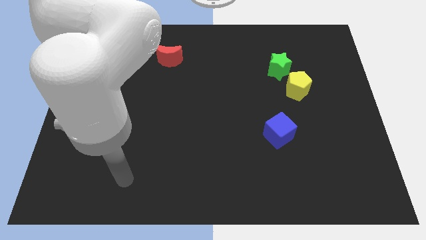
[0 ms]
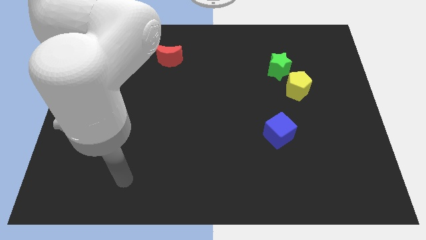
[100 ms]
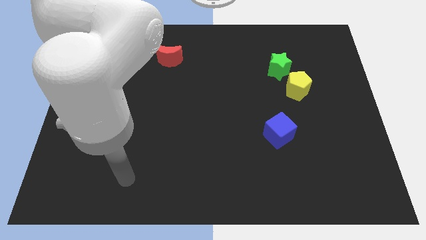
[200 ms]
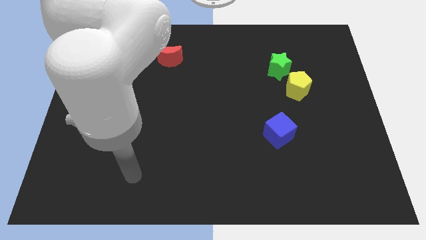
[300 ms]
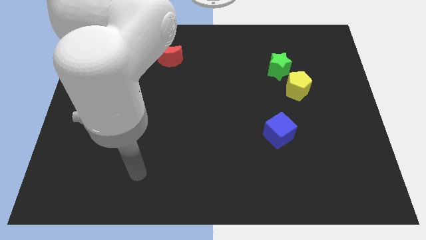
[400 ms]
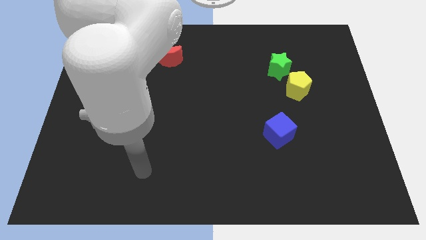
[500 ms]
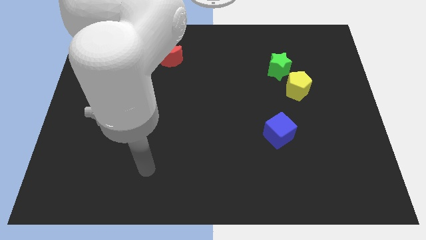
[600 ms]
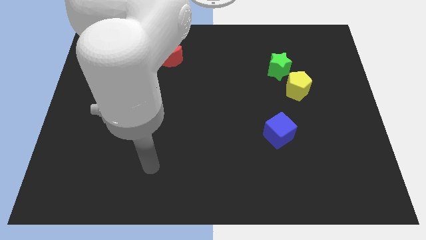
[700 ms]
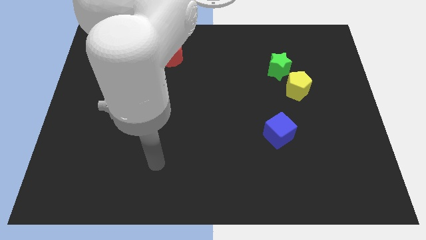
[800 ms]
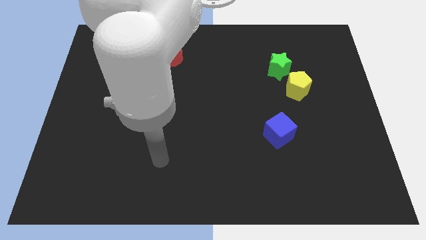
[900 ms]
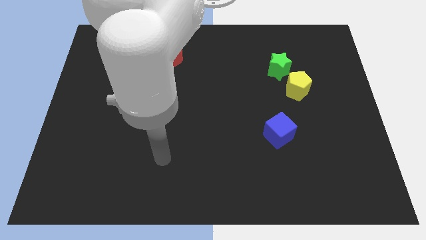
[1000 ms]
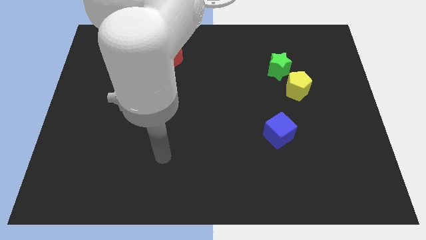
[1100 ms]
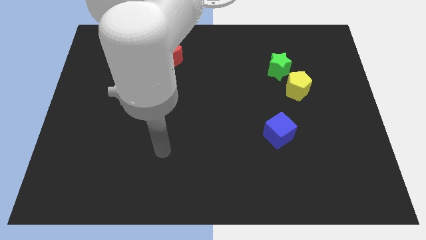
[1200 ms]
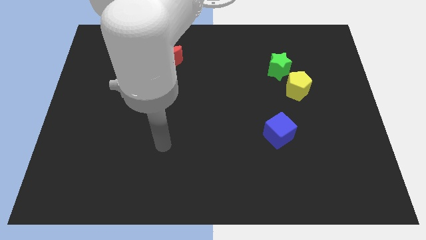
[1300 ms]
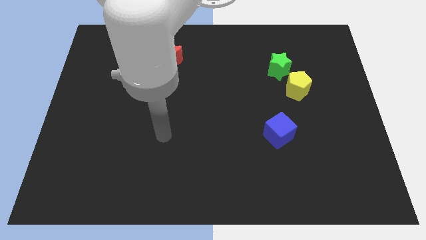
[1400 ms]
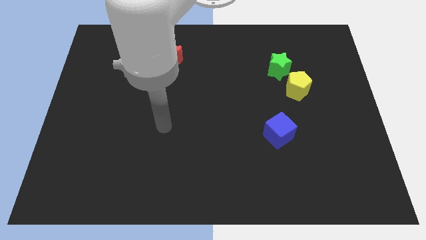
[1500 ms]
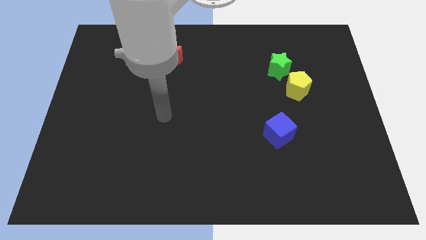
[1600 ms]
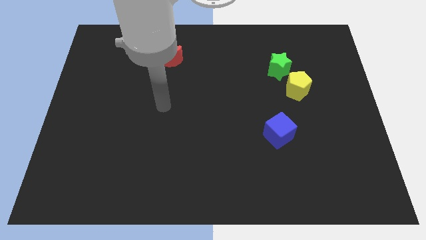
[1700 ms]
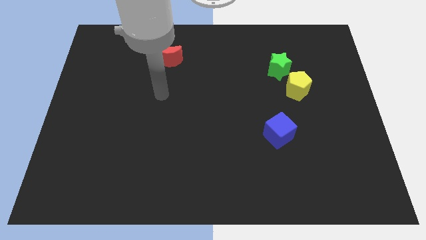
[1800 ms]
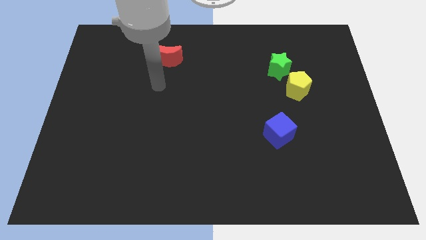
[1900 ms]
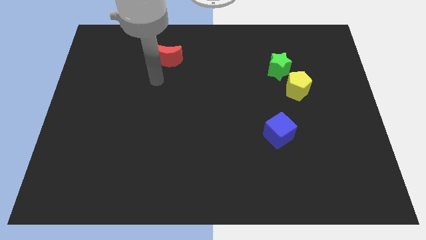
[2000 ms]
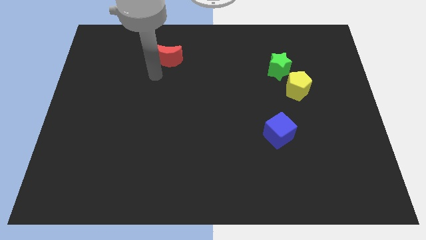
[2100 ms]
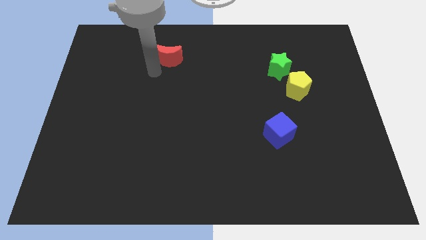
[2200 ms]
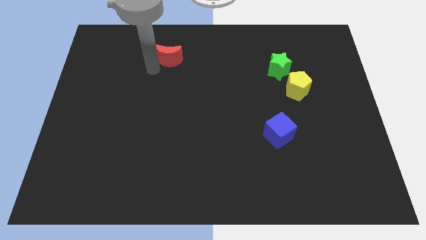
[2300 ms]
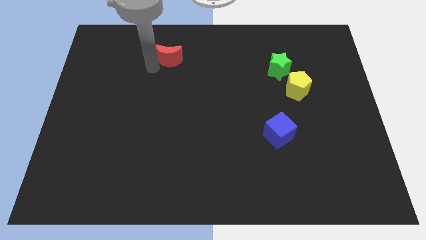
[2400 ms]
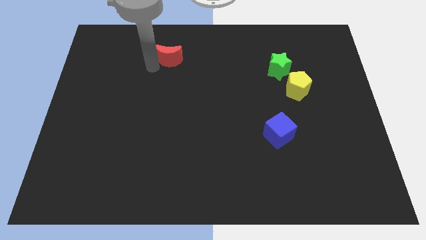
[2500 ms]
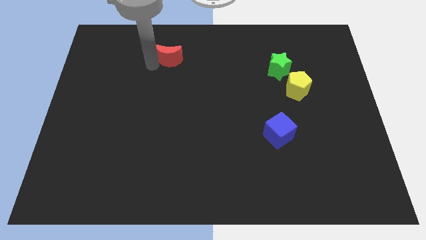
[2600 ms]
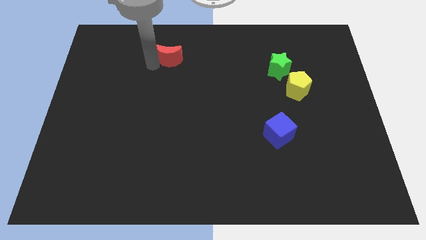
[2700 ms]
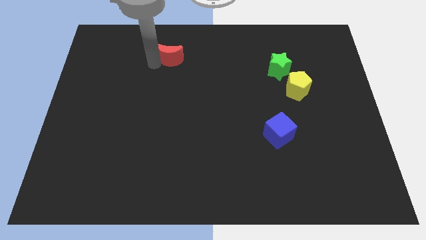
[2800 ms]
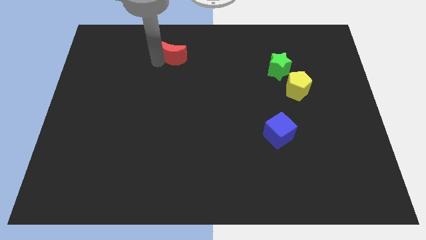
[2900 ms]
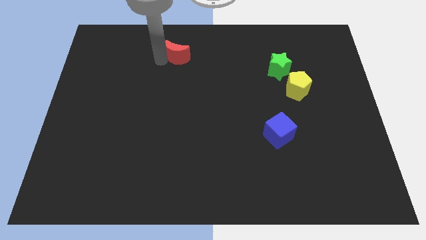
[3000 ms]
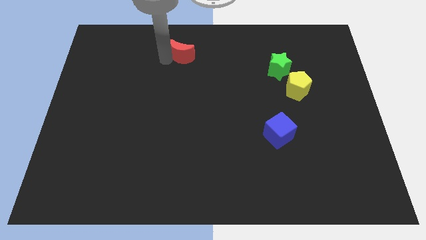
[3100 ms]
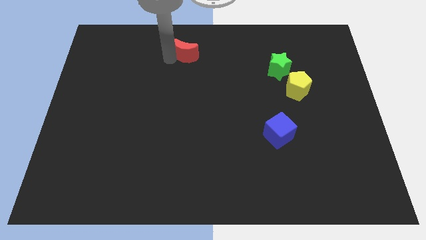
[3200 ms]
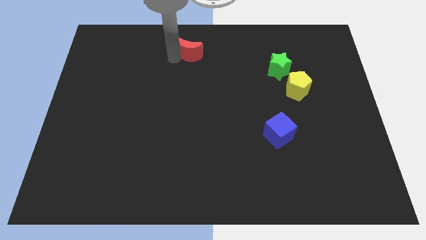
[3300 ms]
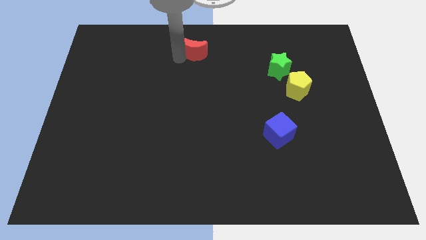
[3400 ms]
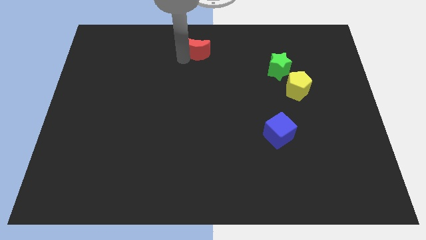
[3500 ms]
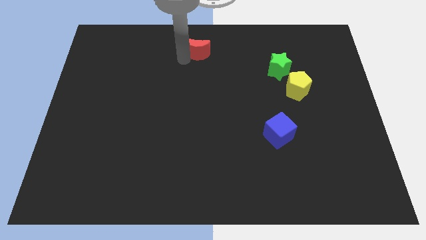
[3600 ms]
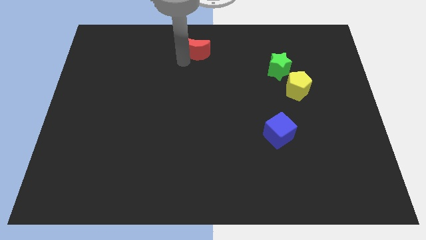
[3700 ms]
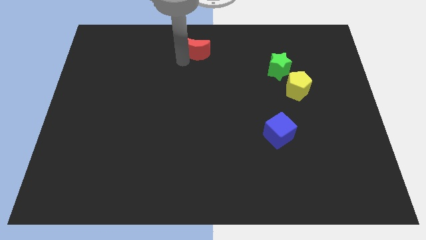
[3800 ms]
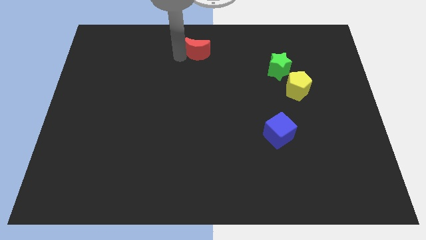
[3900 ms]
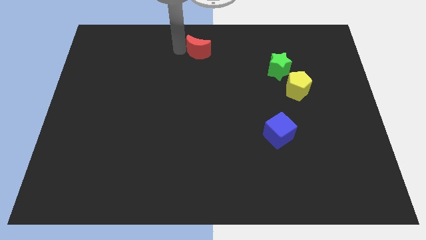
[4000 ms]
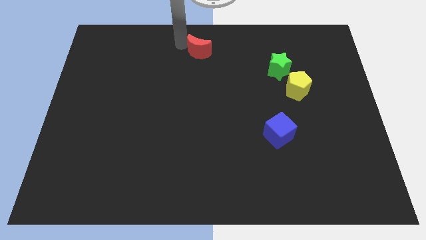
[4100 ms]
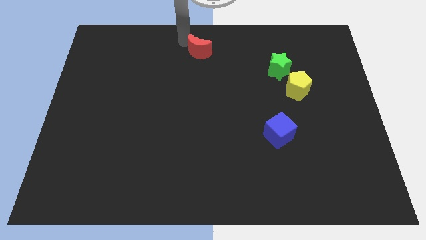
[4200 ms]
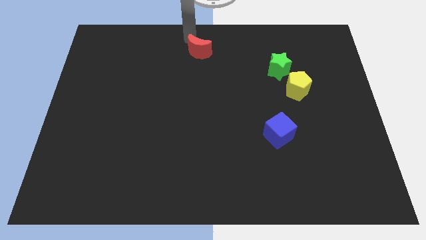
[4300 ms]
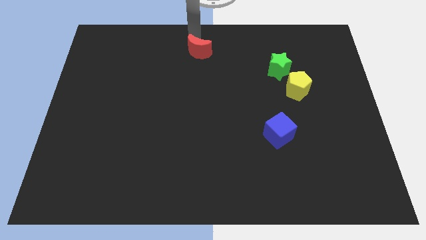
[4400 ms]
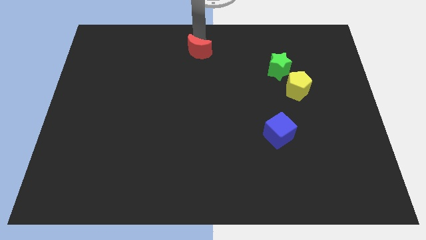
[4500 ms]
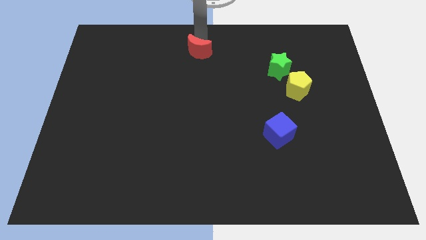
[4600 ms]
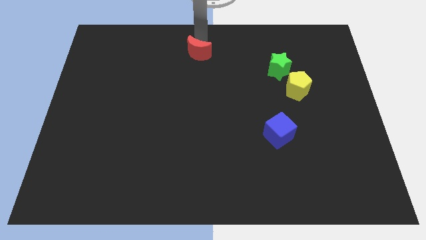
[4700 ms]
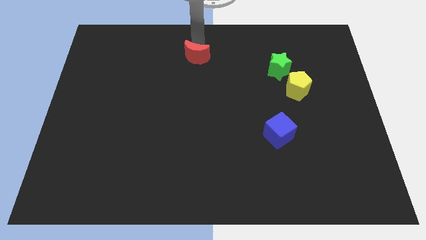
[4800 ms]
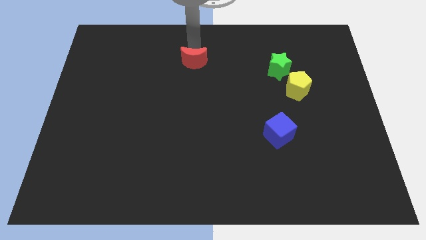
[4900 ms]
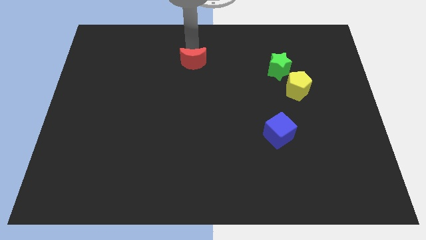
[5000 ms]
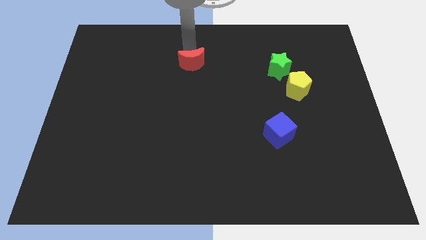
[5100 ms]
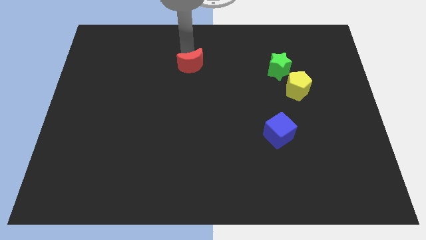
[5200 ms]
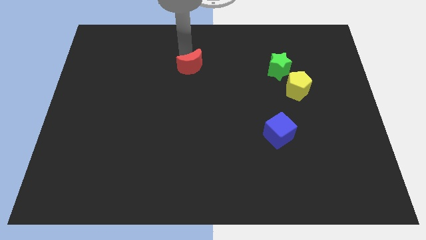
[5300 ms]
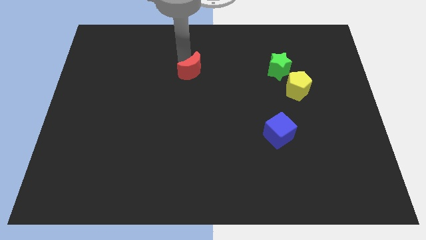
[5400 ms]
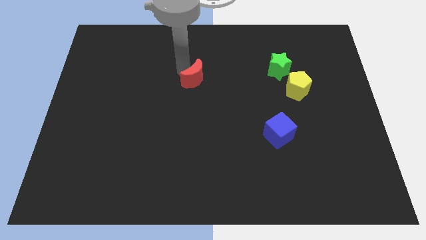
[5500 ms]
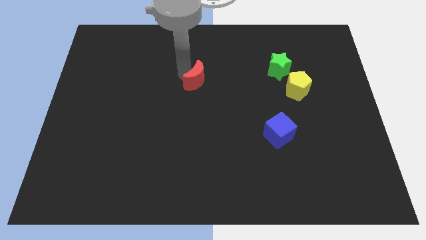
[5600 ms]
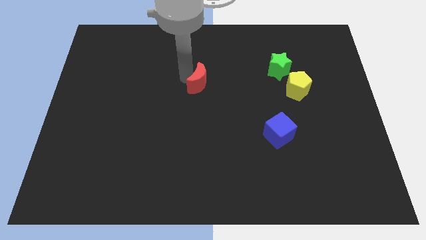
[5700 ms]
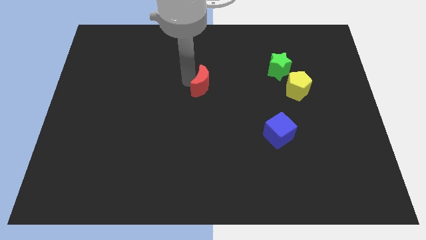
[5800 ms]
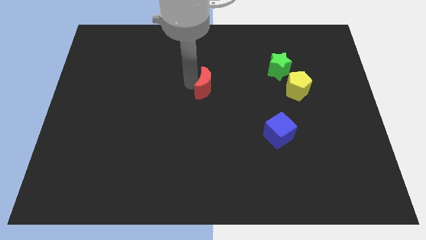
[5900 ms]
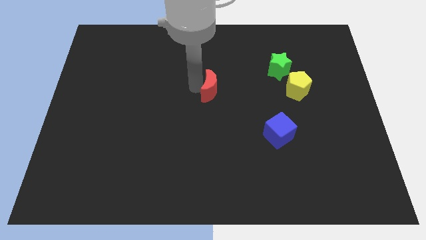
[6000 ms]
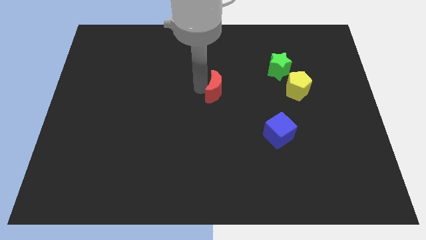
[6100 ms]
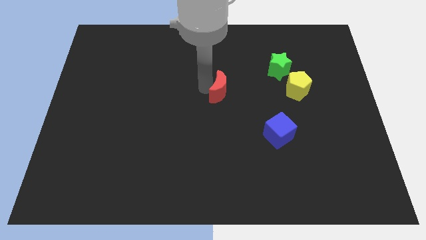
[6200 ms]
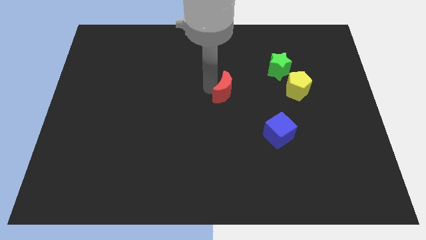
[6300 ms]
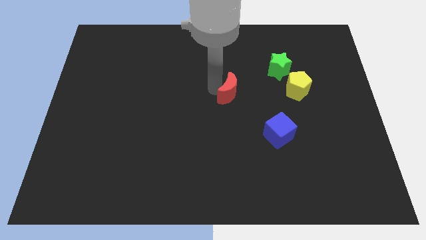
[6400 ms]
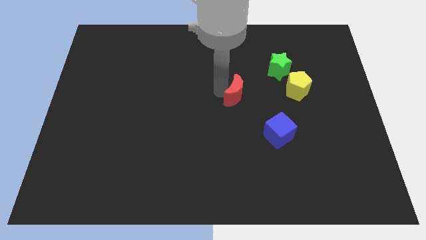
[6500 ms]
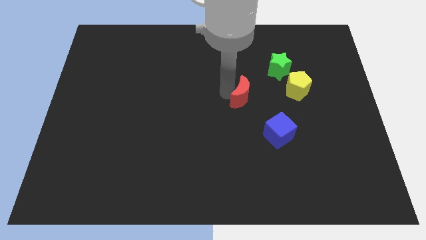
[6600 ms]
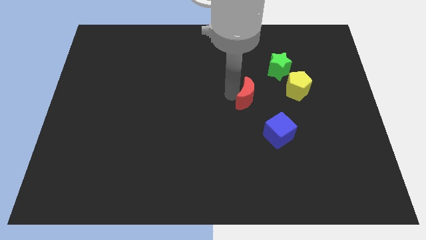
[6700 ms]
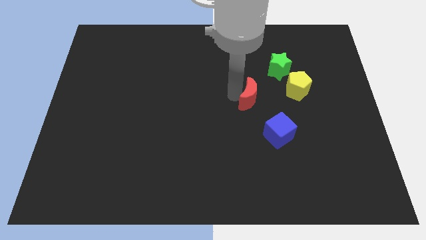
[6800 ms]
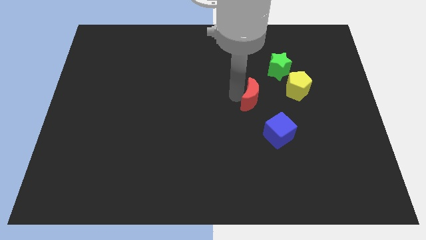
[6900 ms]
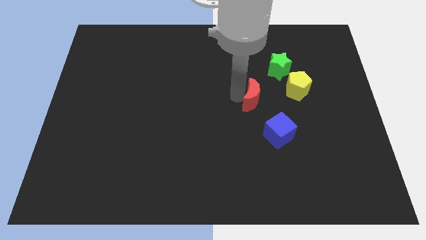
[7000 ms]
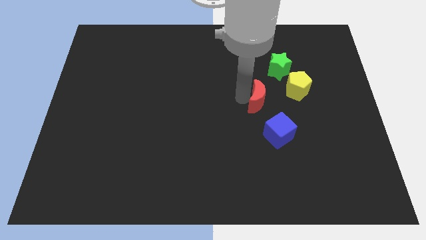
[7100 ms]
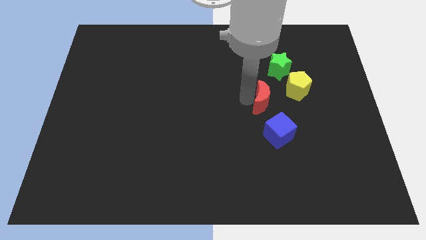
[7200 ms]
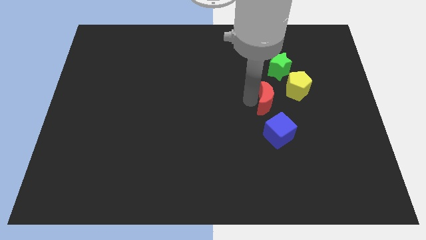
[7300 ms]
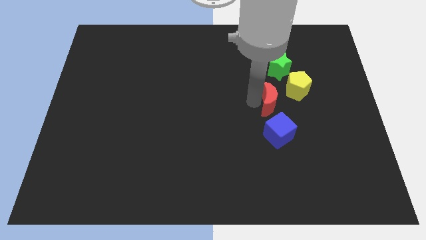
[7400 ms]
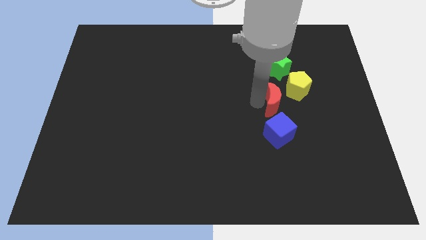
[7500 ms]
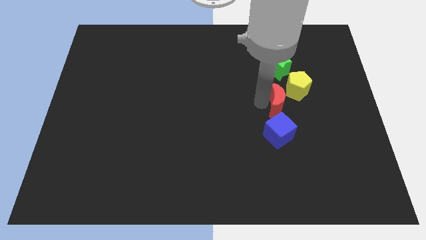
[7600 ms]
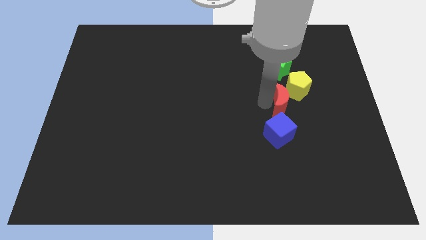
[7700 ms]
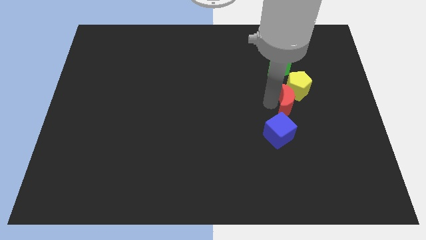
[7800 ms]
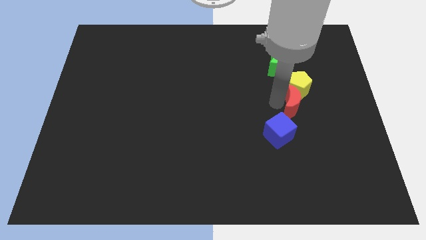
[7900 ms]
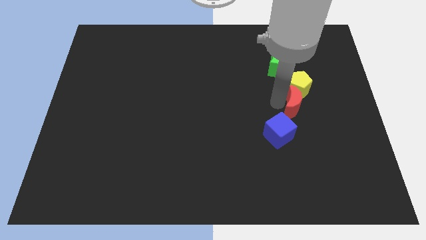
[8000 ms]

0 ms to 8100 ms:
move the red block to the yellow pentagon

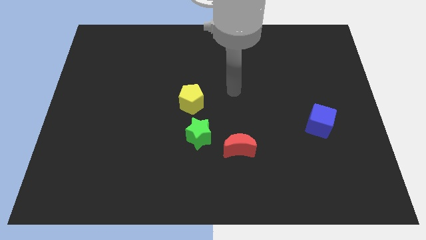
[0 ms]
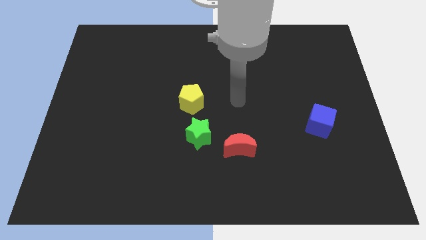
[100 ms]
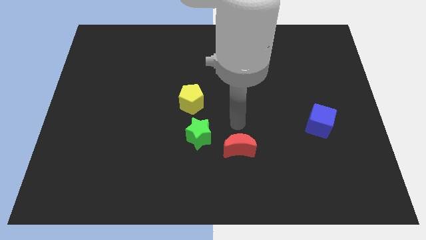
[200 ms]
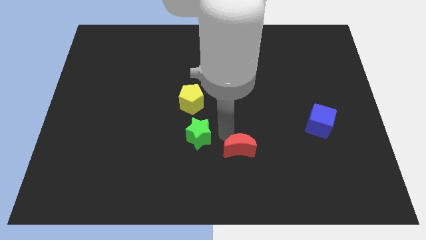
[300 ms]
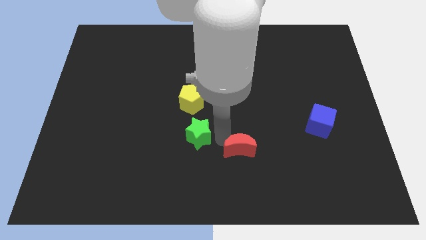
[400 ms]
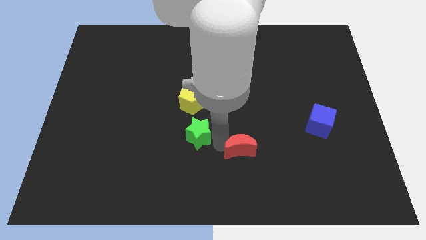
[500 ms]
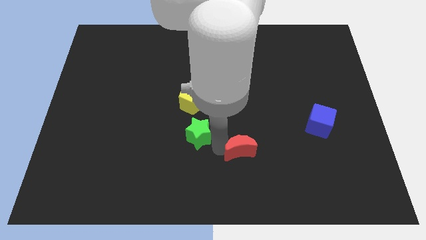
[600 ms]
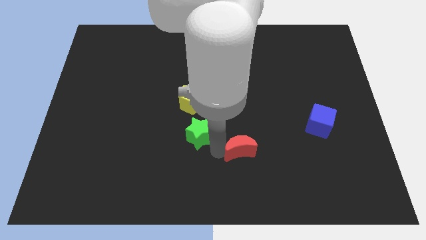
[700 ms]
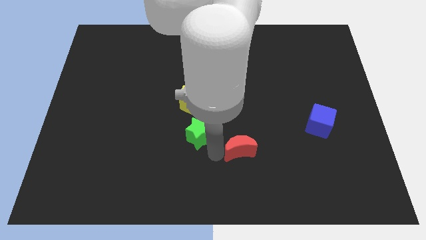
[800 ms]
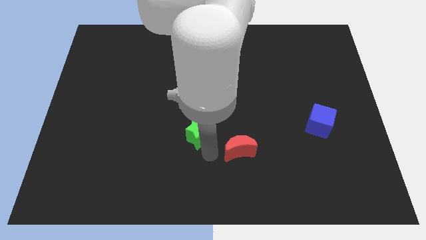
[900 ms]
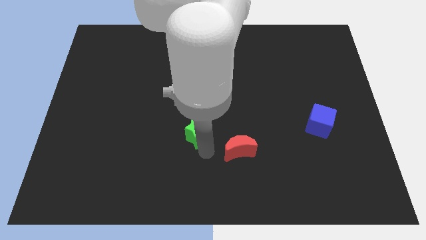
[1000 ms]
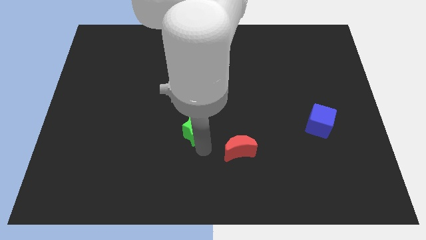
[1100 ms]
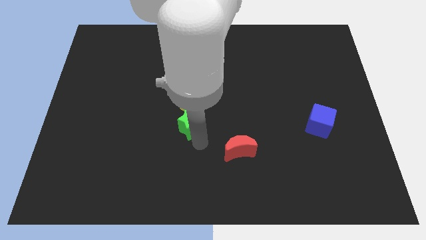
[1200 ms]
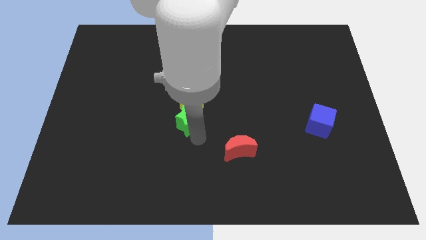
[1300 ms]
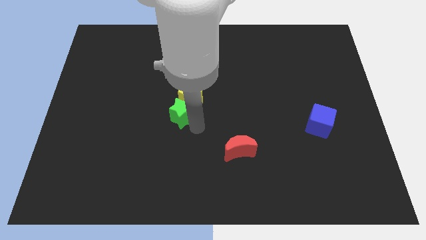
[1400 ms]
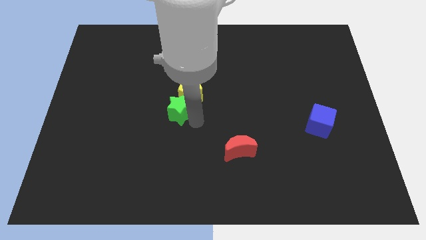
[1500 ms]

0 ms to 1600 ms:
move the green block towards the yellow block
